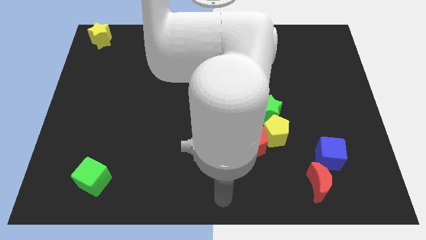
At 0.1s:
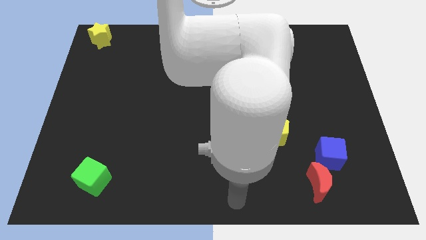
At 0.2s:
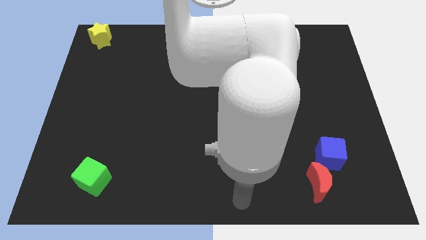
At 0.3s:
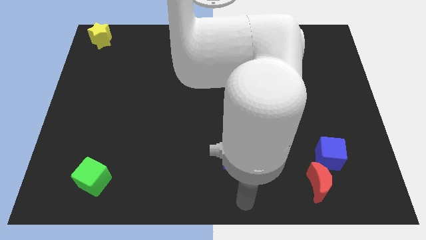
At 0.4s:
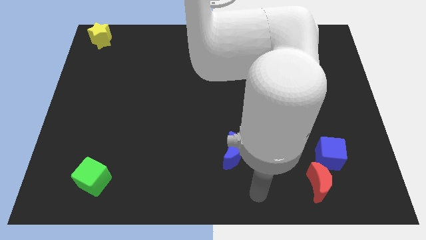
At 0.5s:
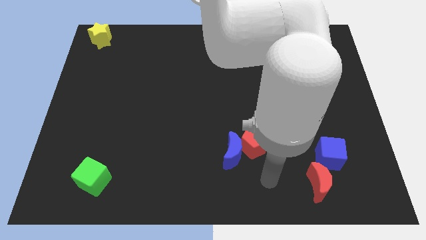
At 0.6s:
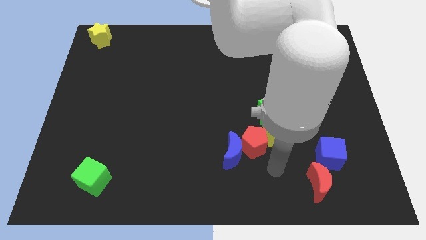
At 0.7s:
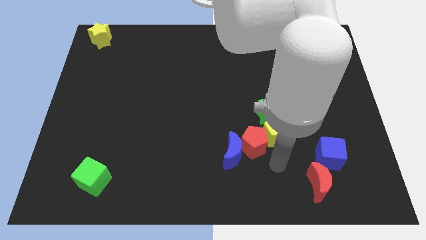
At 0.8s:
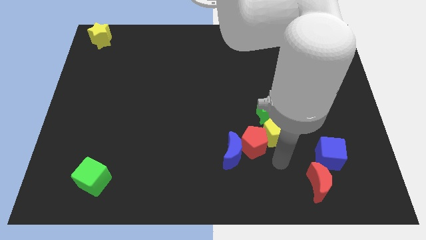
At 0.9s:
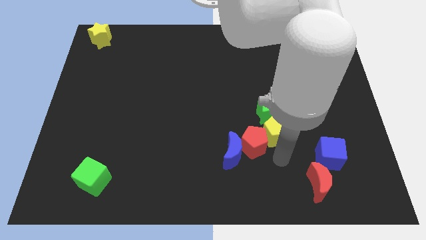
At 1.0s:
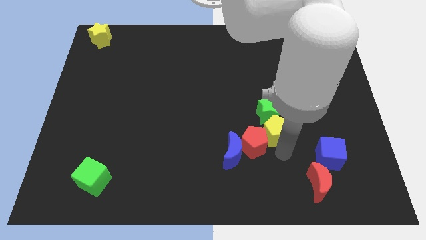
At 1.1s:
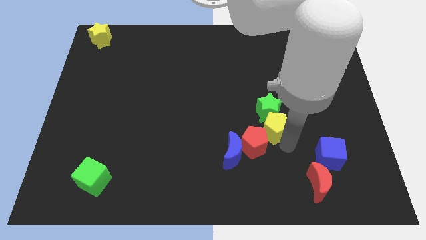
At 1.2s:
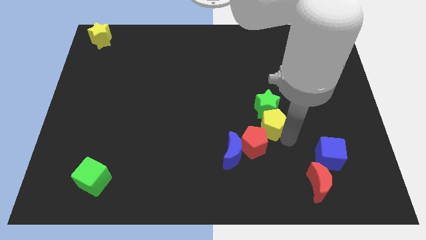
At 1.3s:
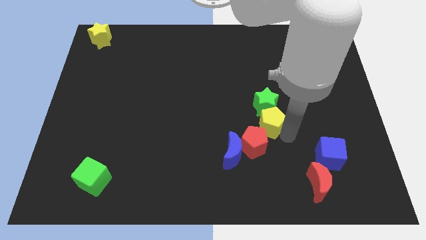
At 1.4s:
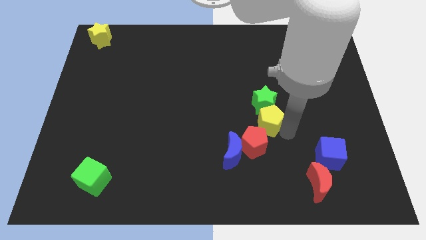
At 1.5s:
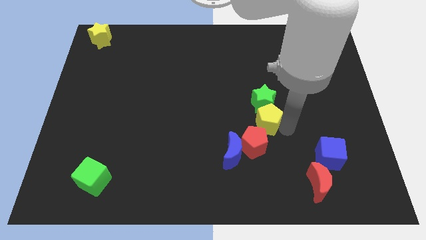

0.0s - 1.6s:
place the arm right to the yellow pentagon

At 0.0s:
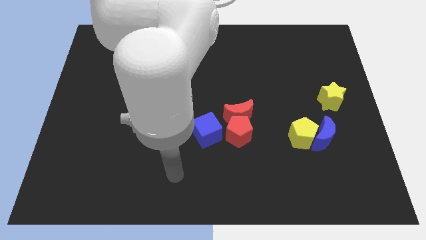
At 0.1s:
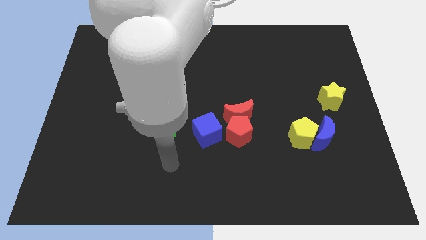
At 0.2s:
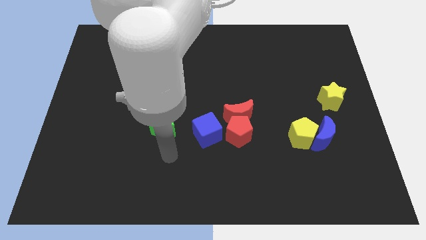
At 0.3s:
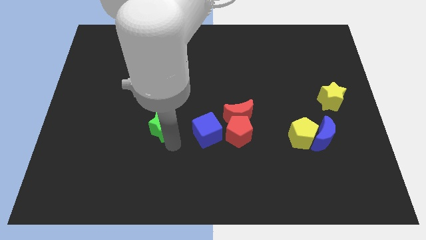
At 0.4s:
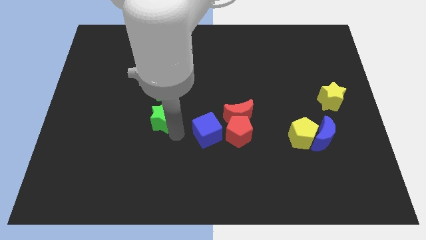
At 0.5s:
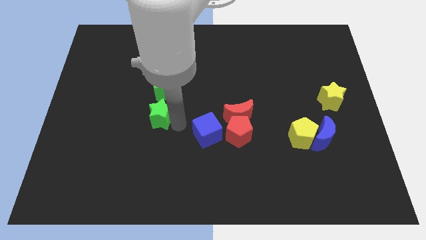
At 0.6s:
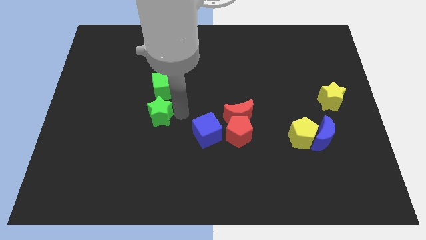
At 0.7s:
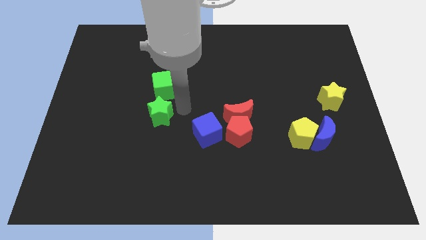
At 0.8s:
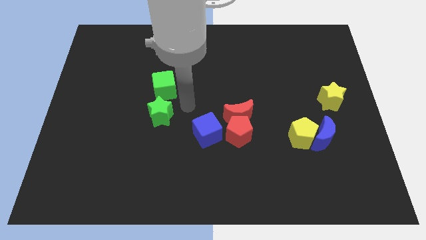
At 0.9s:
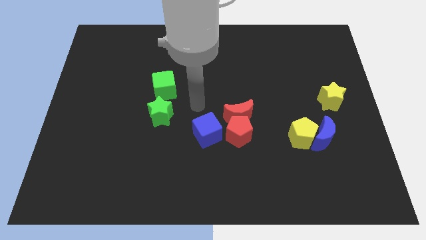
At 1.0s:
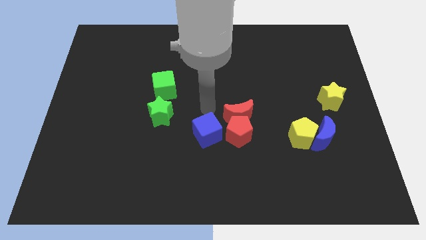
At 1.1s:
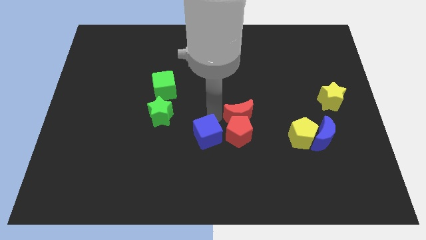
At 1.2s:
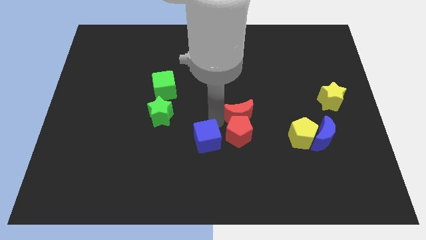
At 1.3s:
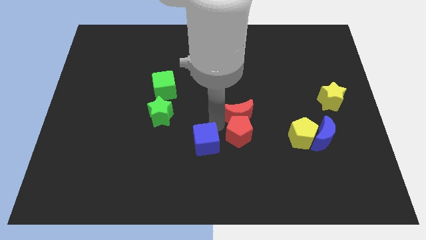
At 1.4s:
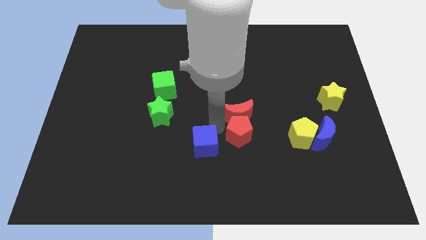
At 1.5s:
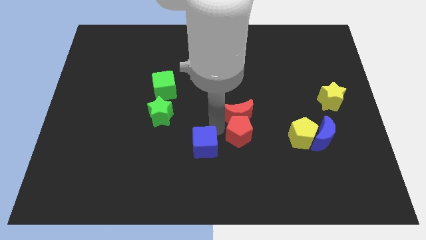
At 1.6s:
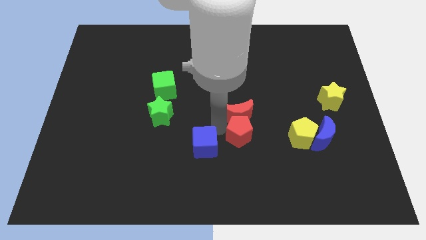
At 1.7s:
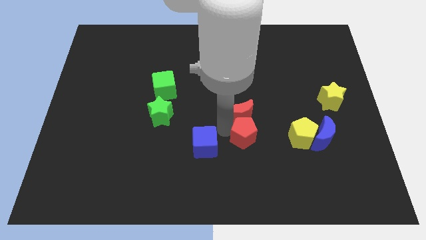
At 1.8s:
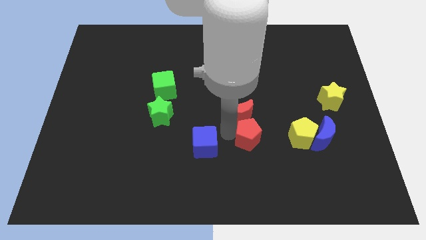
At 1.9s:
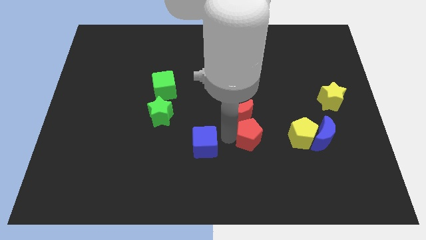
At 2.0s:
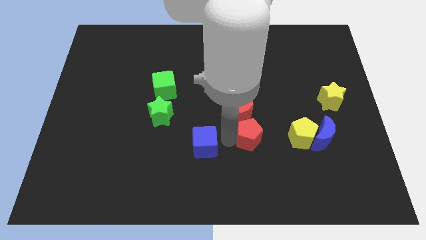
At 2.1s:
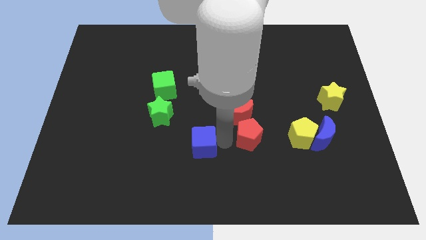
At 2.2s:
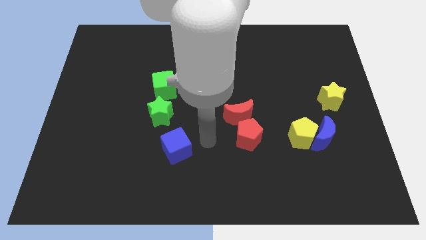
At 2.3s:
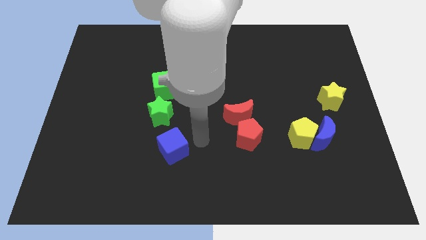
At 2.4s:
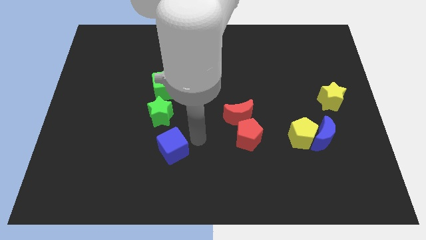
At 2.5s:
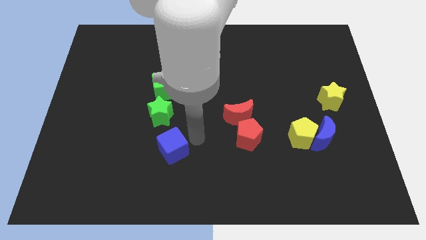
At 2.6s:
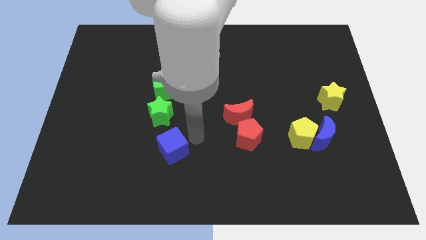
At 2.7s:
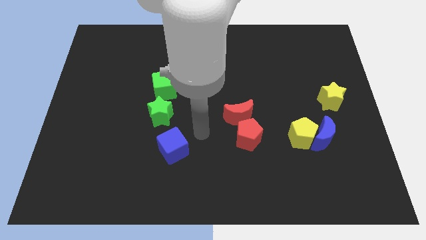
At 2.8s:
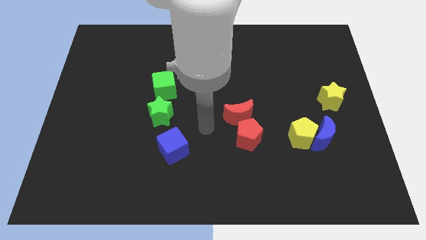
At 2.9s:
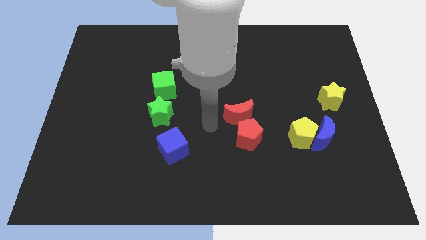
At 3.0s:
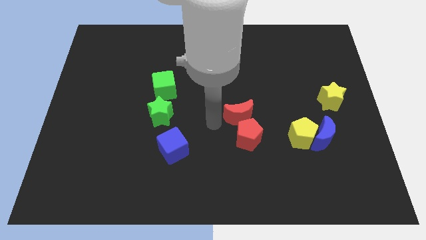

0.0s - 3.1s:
separate blue cube from red pentagon

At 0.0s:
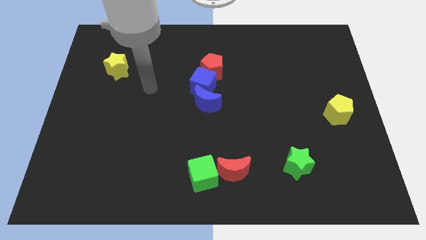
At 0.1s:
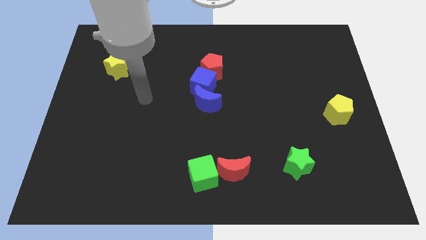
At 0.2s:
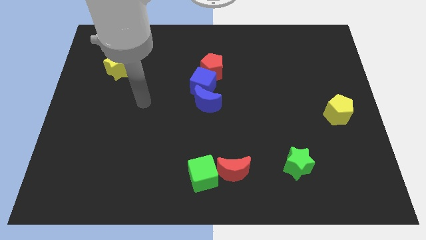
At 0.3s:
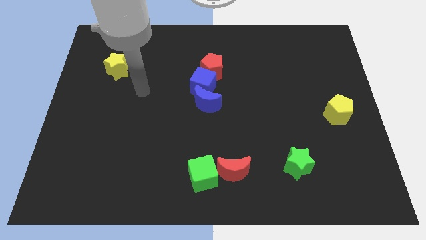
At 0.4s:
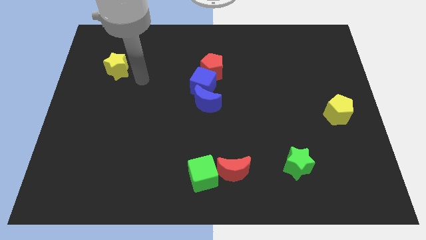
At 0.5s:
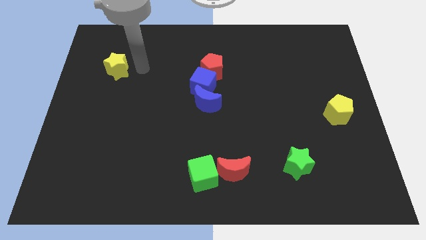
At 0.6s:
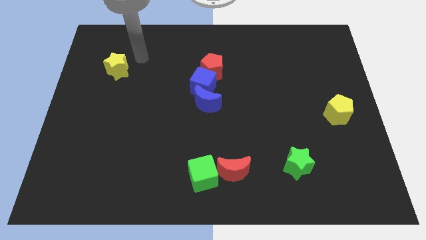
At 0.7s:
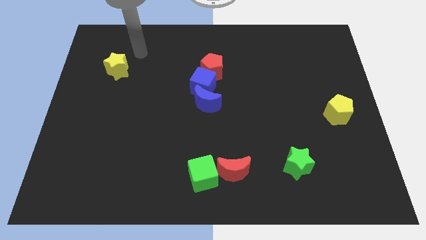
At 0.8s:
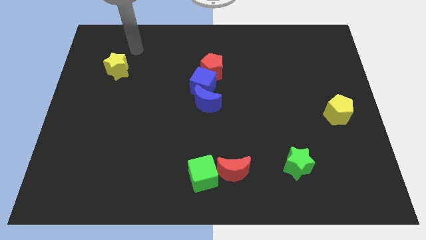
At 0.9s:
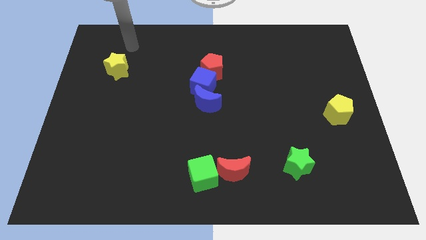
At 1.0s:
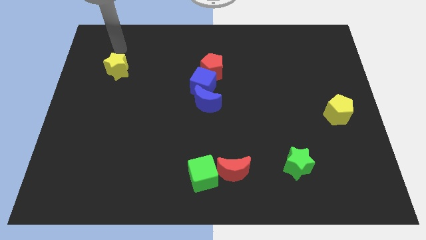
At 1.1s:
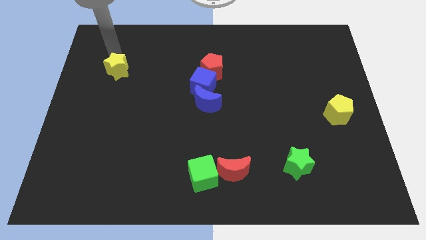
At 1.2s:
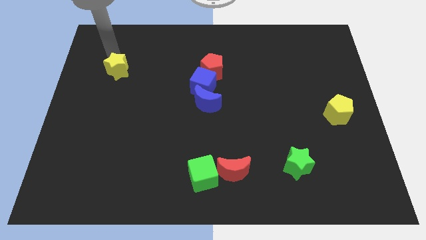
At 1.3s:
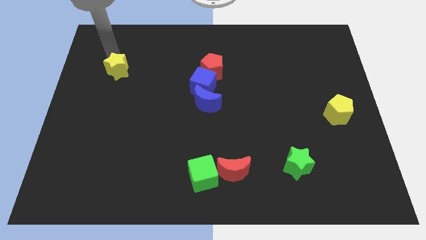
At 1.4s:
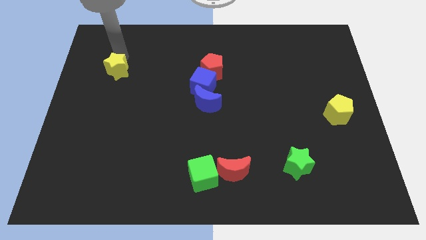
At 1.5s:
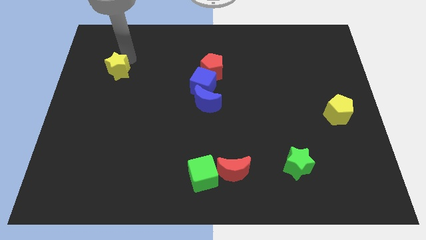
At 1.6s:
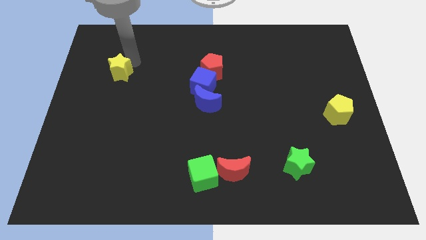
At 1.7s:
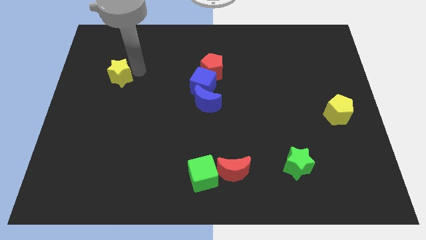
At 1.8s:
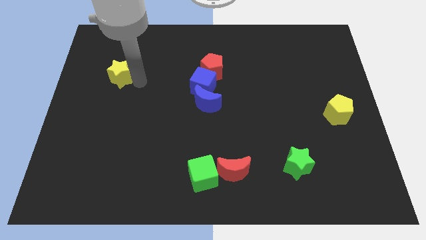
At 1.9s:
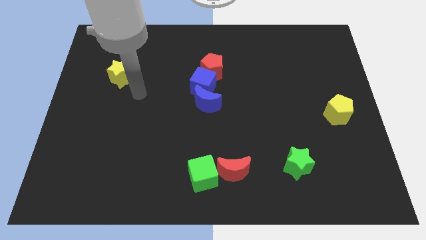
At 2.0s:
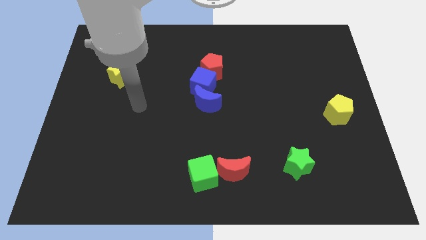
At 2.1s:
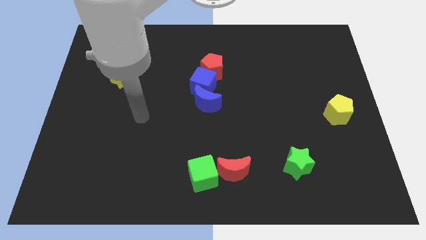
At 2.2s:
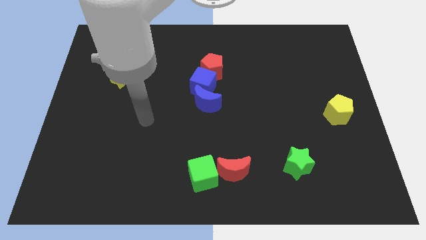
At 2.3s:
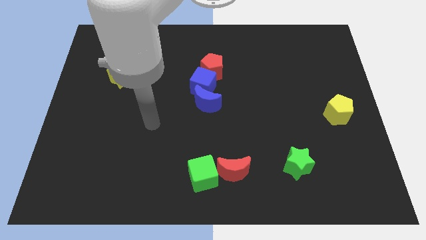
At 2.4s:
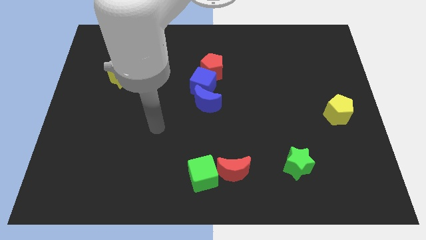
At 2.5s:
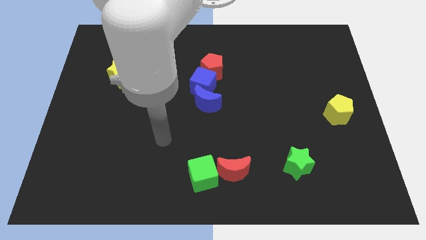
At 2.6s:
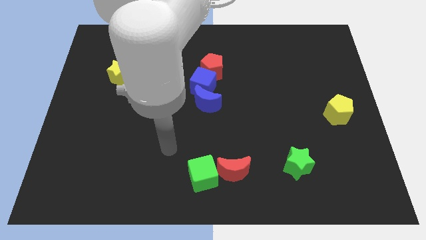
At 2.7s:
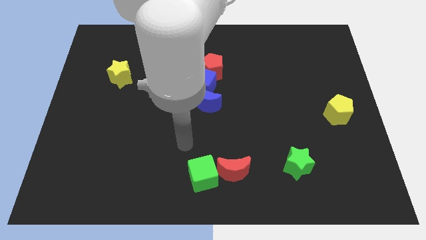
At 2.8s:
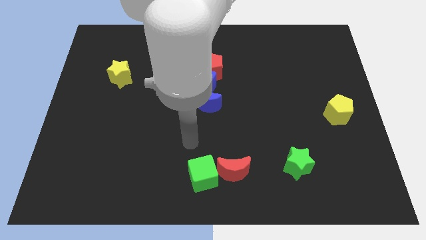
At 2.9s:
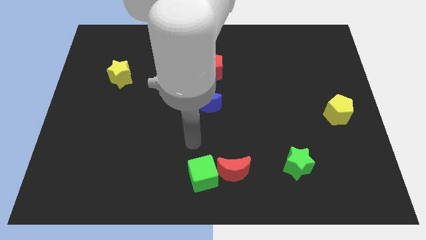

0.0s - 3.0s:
slightly push the yellow star towards the bottom

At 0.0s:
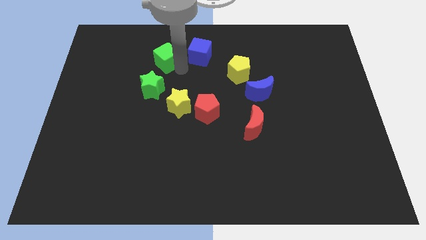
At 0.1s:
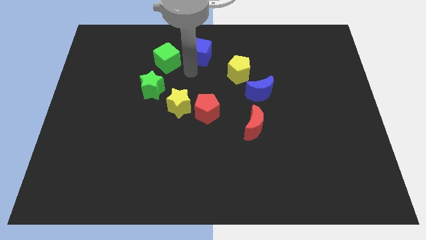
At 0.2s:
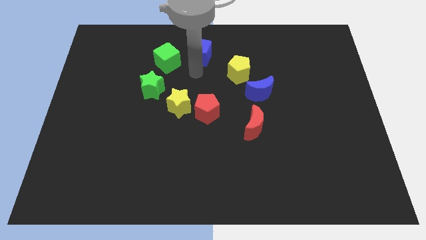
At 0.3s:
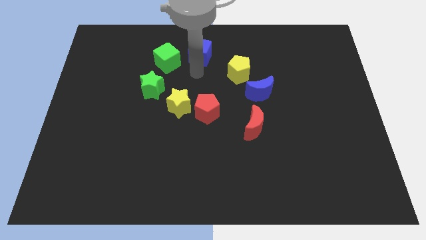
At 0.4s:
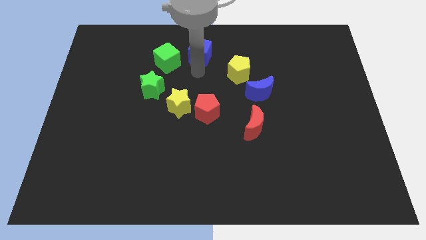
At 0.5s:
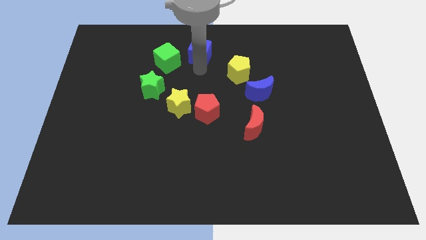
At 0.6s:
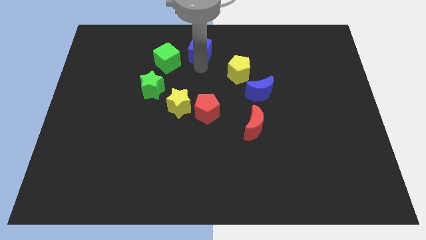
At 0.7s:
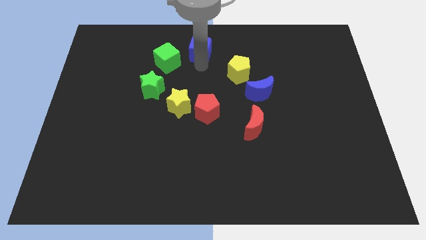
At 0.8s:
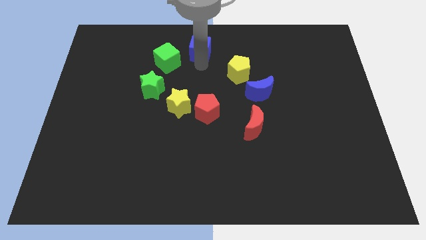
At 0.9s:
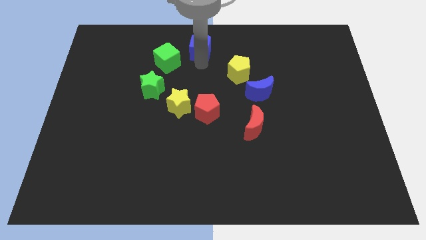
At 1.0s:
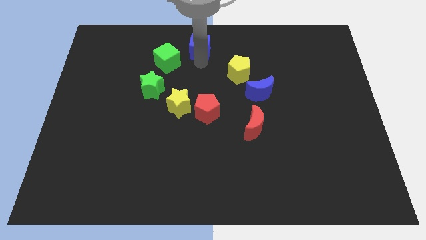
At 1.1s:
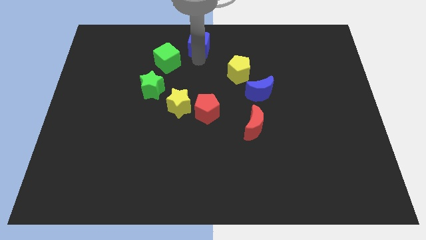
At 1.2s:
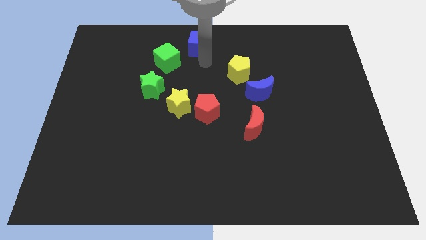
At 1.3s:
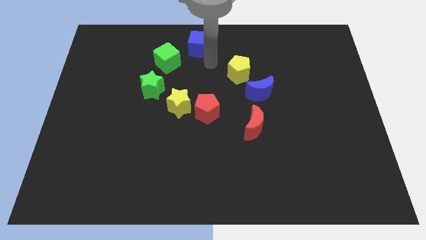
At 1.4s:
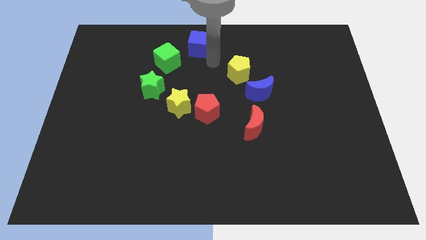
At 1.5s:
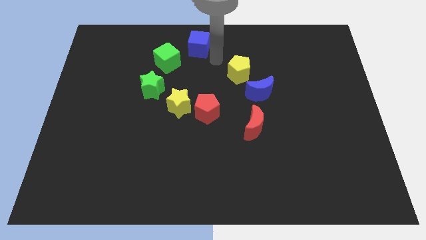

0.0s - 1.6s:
slightly move the blue cube up
